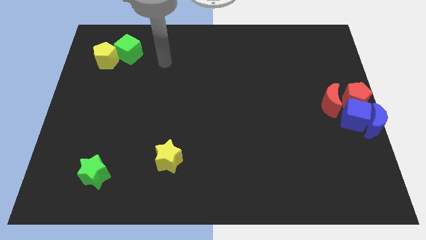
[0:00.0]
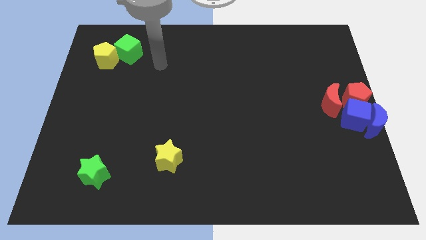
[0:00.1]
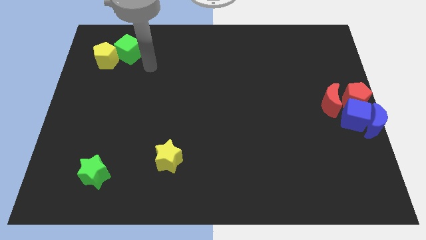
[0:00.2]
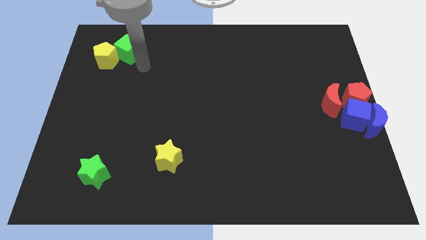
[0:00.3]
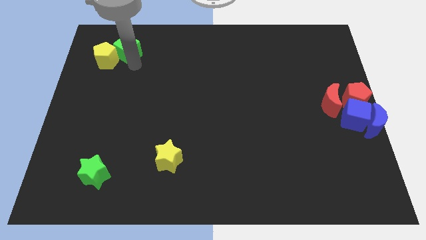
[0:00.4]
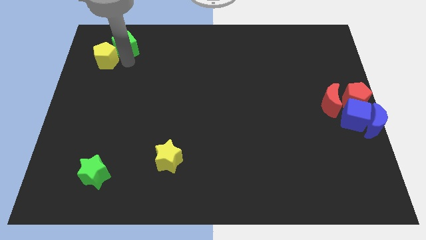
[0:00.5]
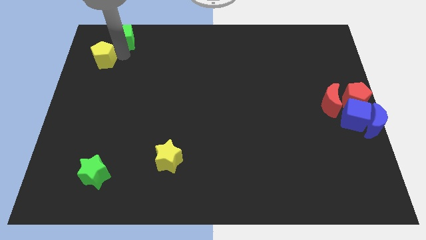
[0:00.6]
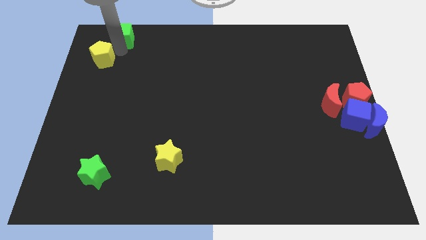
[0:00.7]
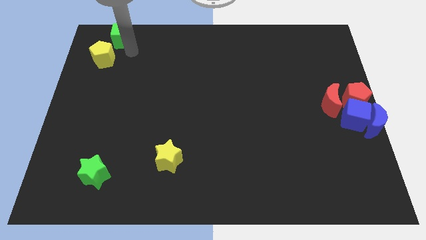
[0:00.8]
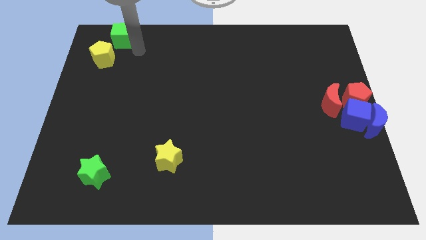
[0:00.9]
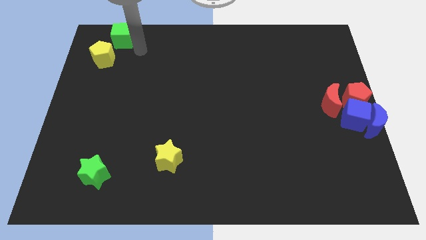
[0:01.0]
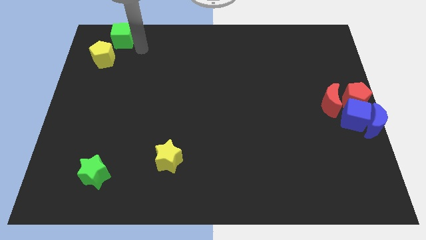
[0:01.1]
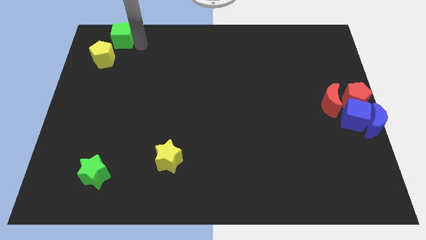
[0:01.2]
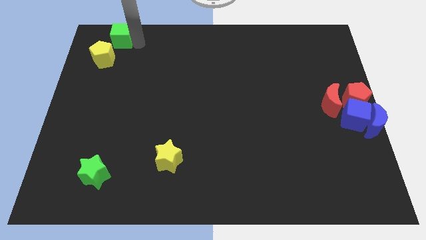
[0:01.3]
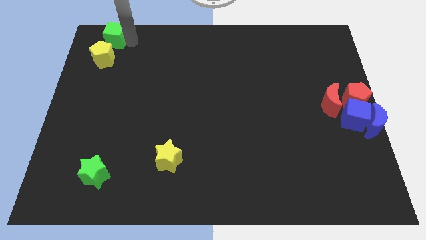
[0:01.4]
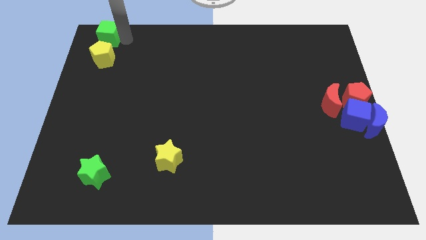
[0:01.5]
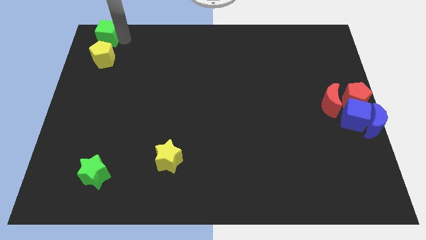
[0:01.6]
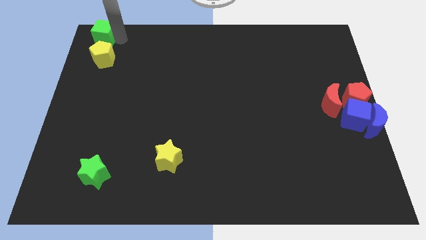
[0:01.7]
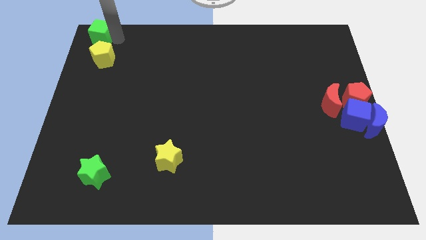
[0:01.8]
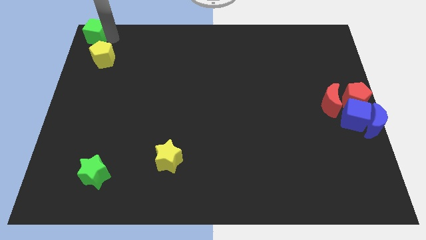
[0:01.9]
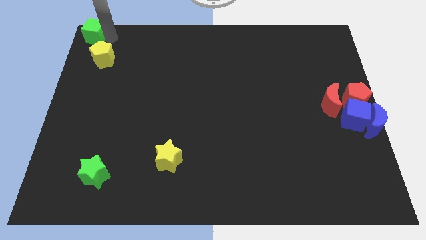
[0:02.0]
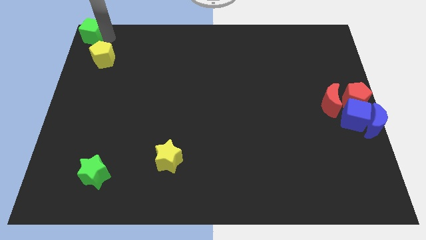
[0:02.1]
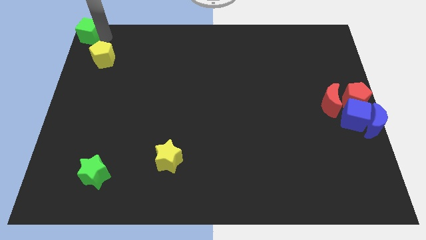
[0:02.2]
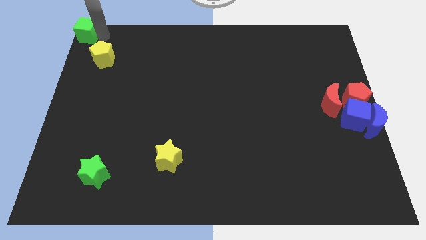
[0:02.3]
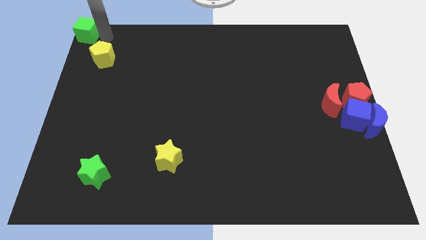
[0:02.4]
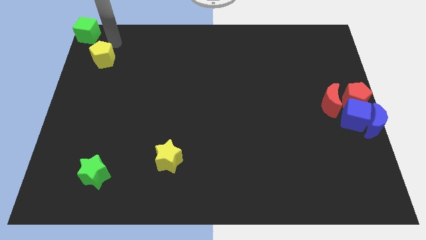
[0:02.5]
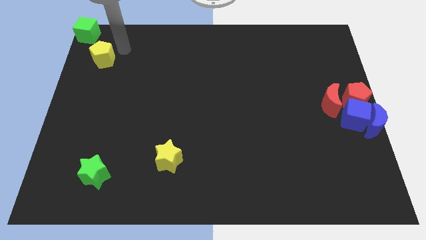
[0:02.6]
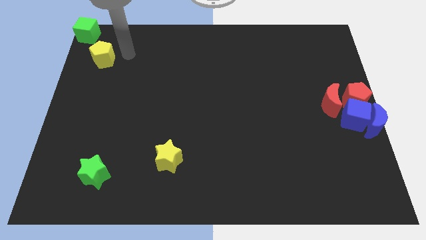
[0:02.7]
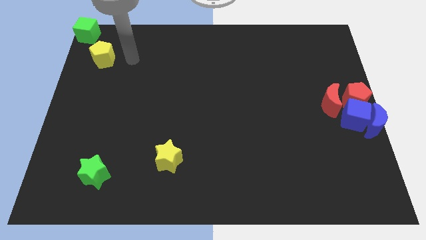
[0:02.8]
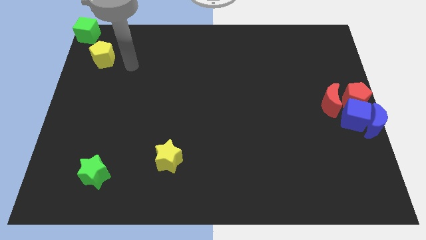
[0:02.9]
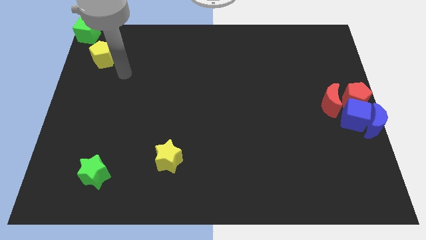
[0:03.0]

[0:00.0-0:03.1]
move the green cube to the top left corner

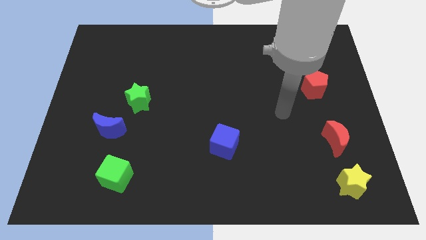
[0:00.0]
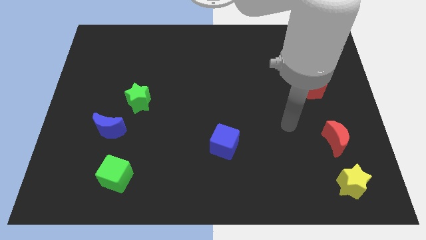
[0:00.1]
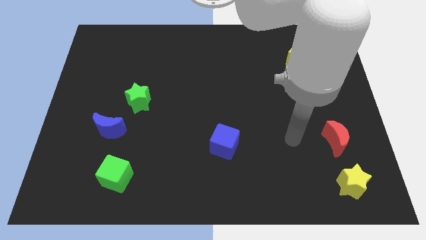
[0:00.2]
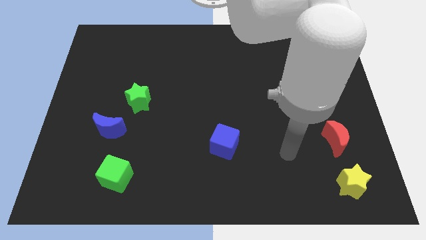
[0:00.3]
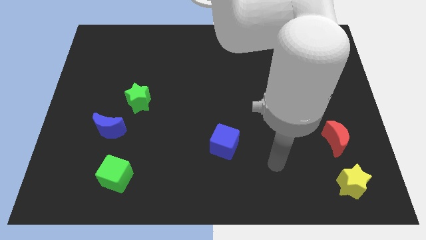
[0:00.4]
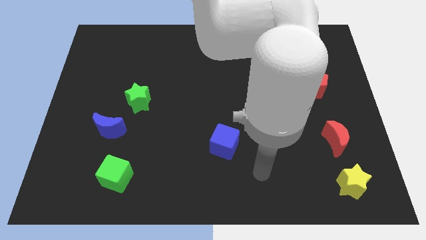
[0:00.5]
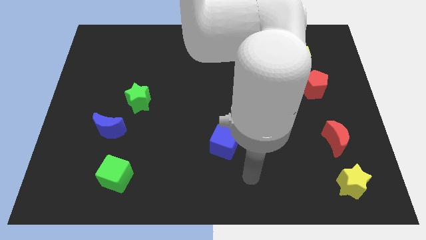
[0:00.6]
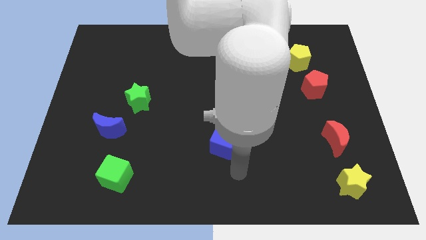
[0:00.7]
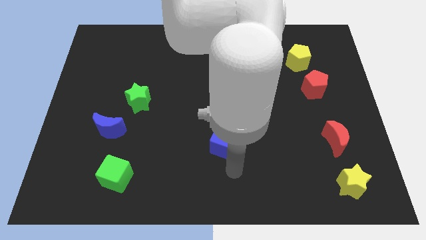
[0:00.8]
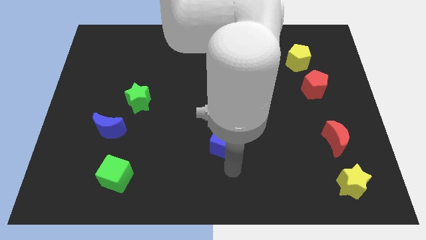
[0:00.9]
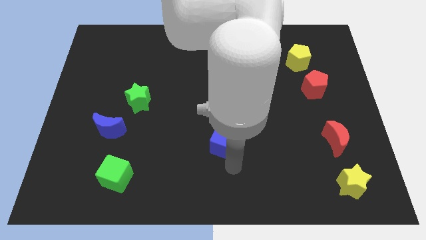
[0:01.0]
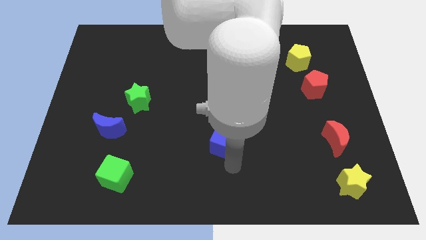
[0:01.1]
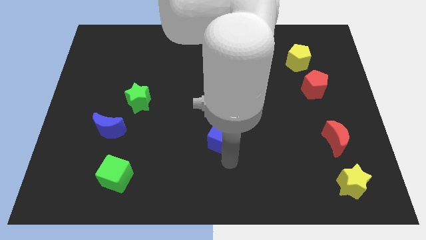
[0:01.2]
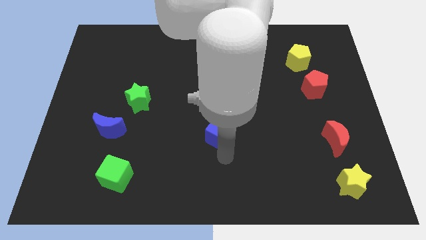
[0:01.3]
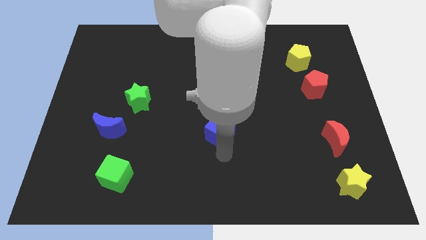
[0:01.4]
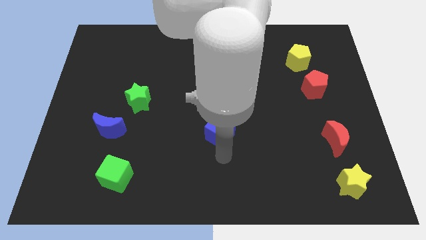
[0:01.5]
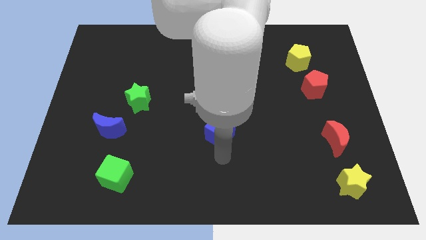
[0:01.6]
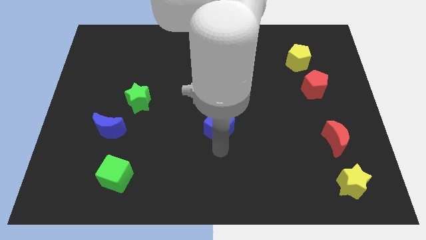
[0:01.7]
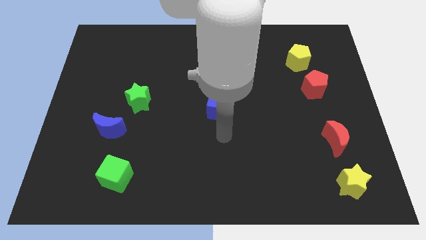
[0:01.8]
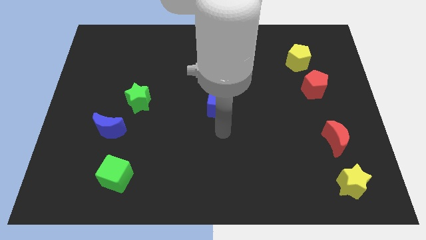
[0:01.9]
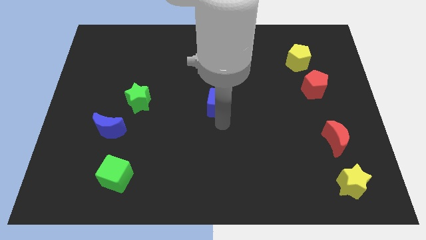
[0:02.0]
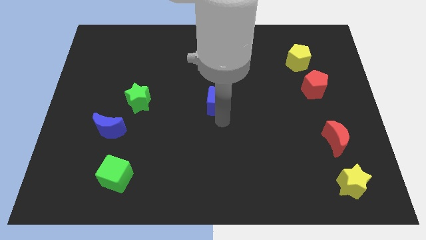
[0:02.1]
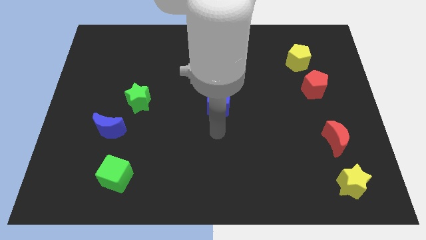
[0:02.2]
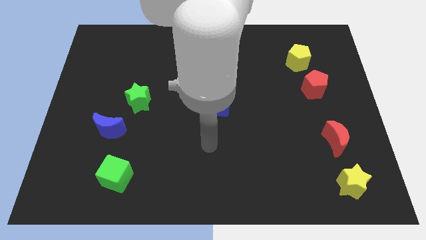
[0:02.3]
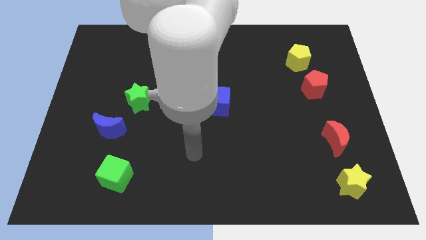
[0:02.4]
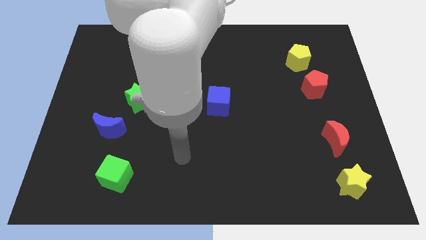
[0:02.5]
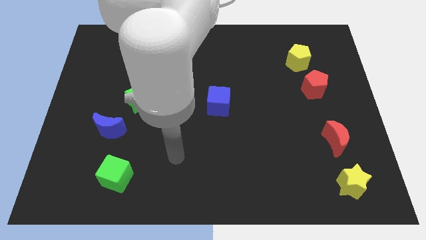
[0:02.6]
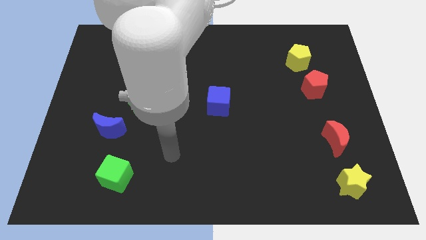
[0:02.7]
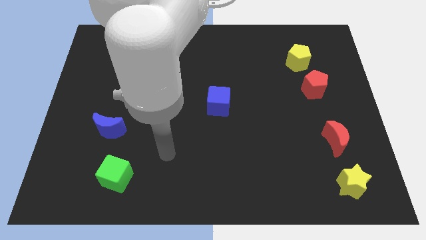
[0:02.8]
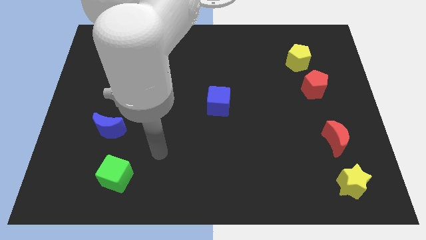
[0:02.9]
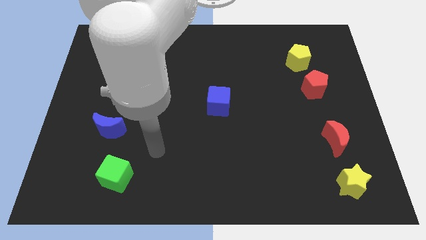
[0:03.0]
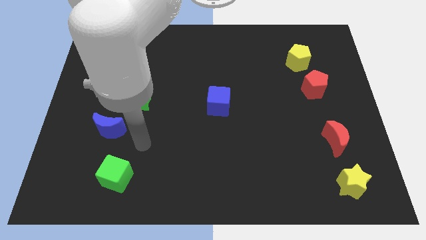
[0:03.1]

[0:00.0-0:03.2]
move the blue block towards the center of the board

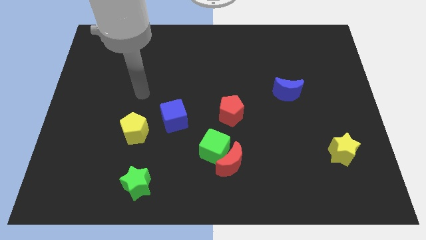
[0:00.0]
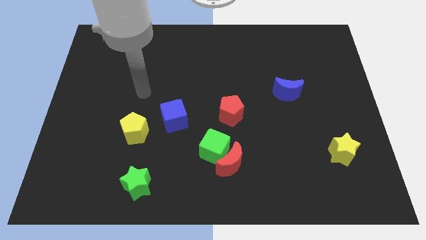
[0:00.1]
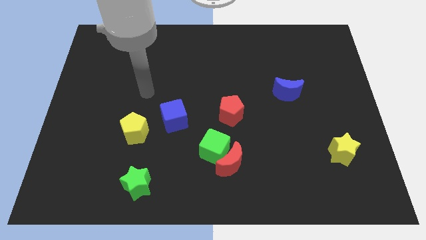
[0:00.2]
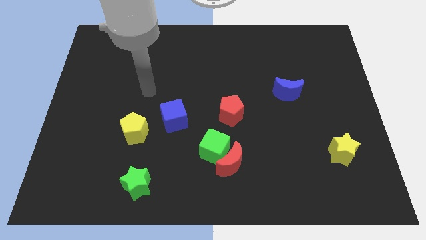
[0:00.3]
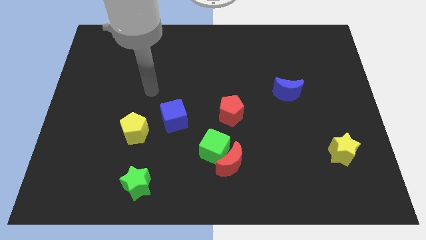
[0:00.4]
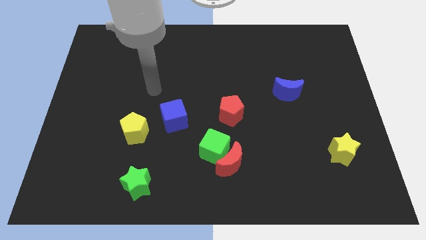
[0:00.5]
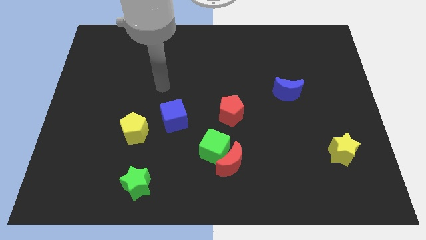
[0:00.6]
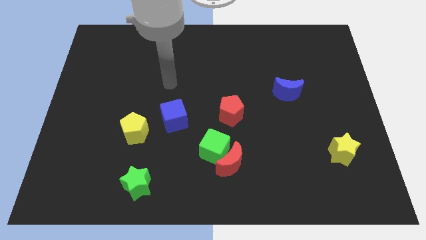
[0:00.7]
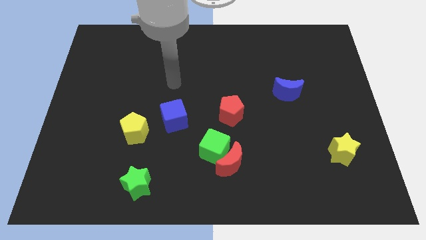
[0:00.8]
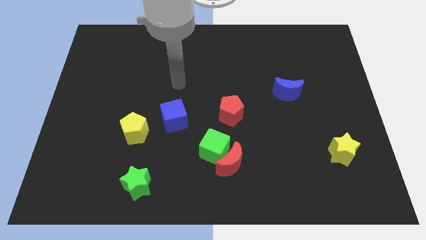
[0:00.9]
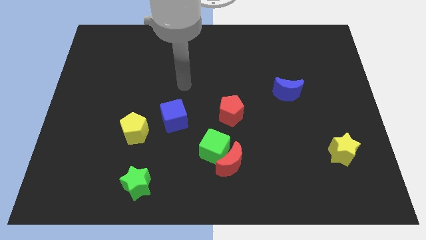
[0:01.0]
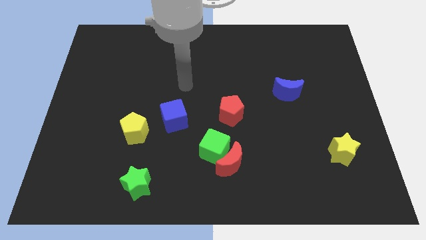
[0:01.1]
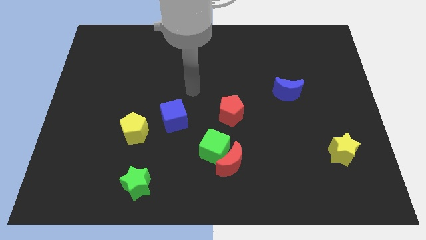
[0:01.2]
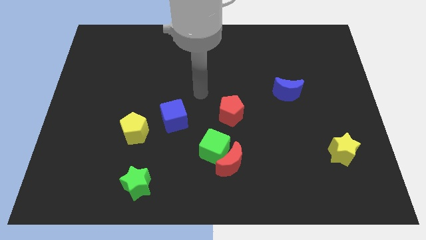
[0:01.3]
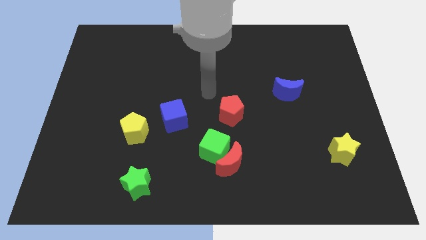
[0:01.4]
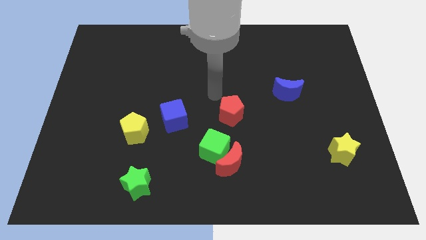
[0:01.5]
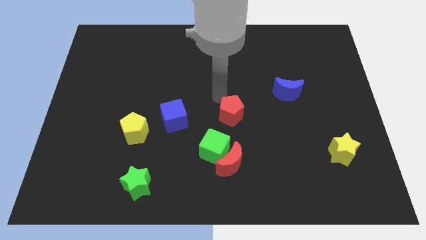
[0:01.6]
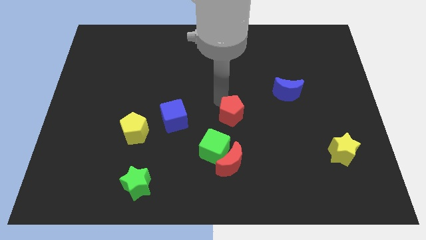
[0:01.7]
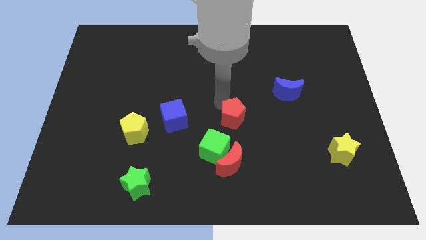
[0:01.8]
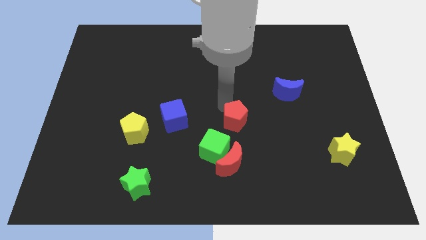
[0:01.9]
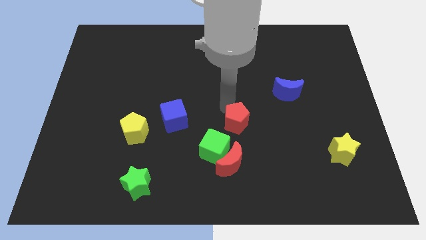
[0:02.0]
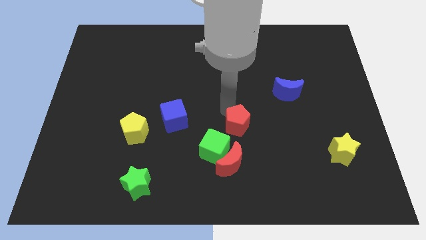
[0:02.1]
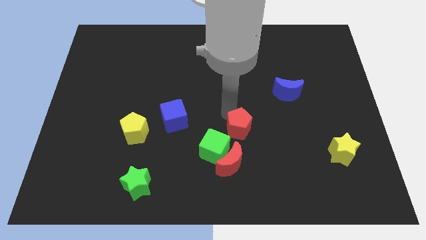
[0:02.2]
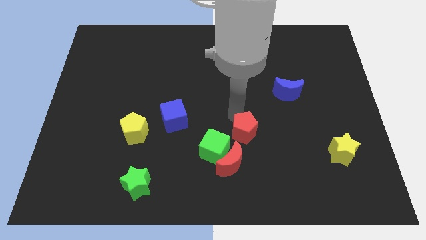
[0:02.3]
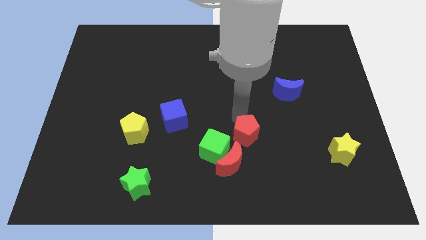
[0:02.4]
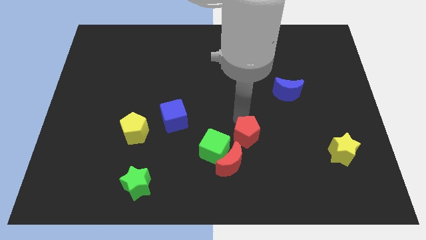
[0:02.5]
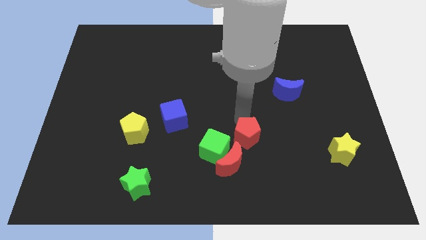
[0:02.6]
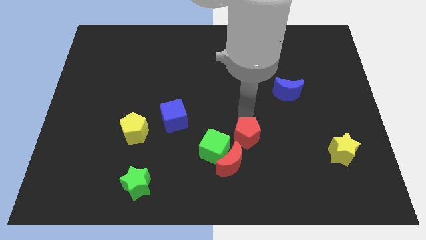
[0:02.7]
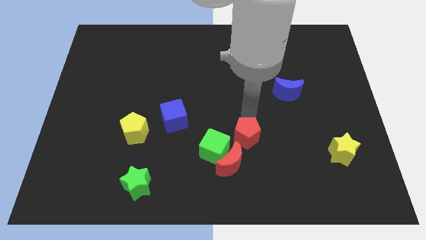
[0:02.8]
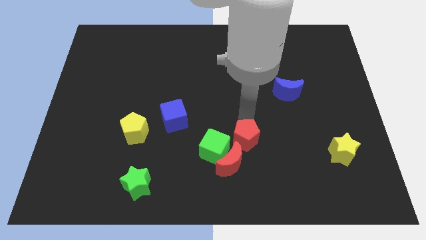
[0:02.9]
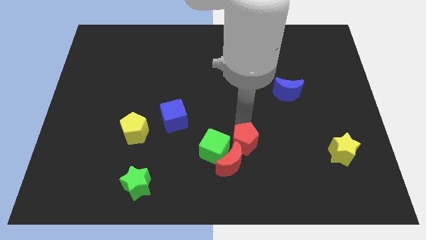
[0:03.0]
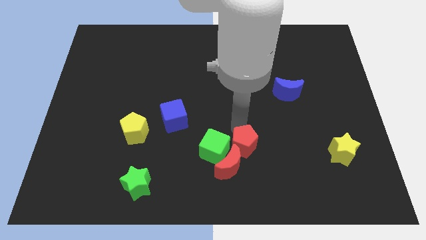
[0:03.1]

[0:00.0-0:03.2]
push the red pentagon to the top right of red moon
